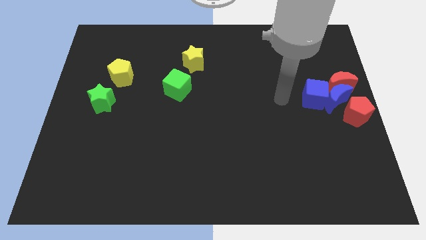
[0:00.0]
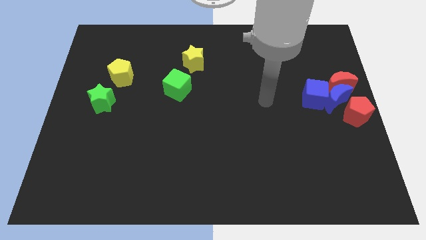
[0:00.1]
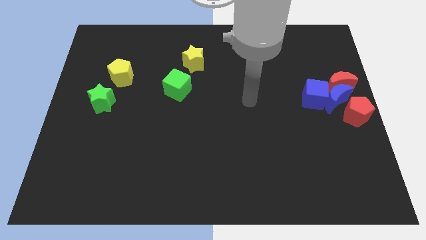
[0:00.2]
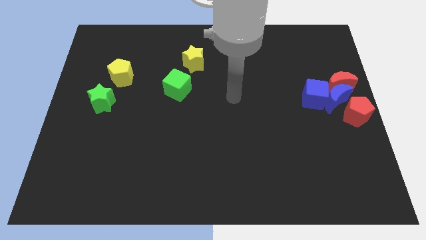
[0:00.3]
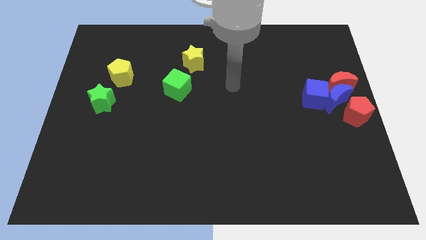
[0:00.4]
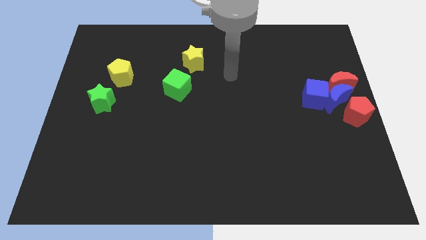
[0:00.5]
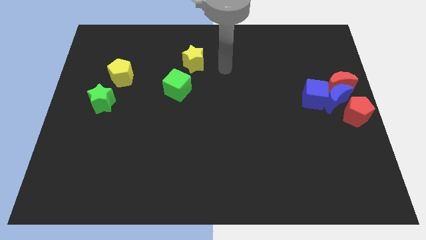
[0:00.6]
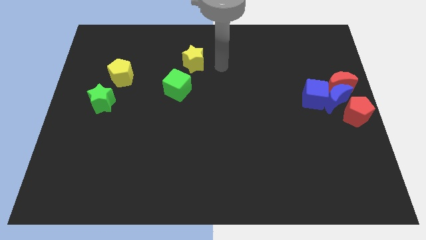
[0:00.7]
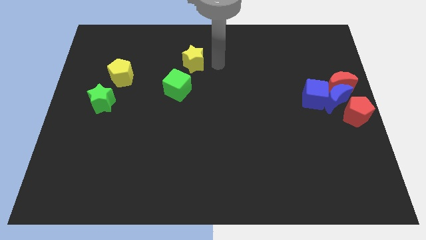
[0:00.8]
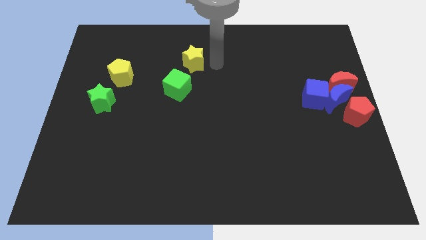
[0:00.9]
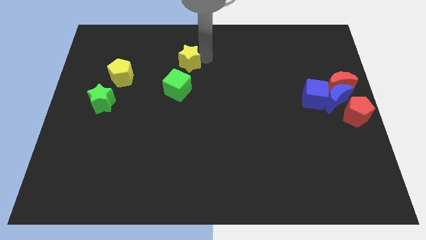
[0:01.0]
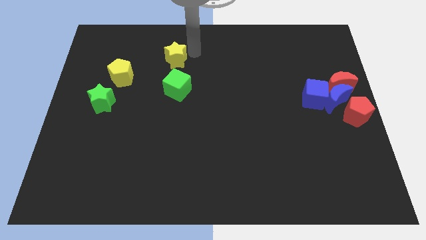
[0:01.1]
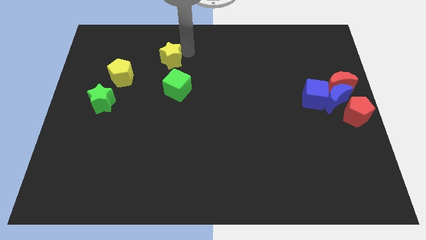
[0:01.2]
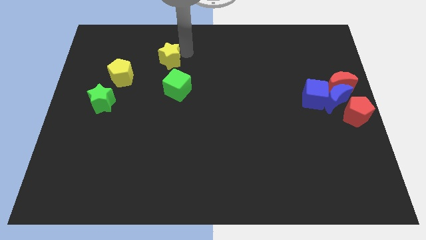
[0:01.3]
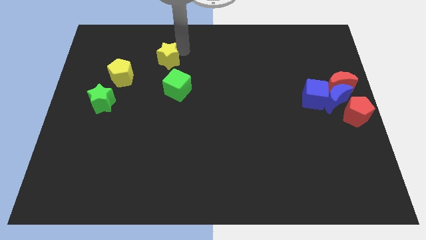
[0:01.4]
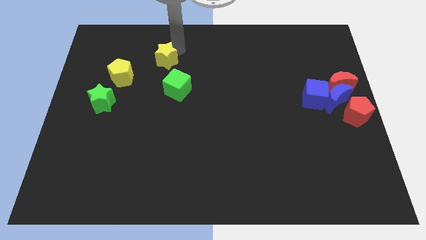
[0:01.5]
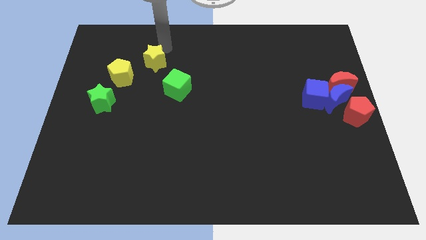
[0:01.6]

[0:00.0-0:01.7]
slightly push the yellow star to the left

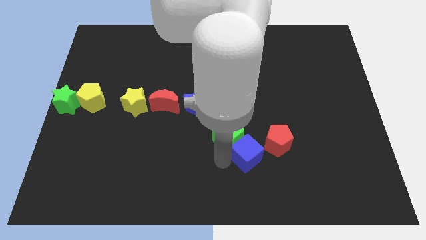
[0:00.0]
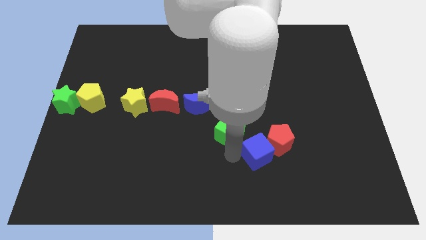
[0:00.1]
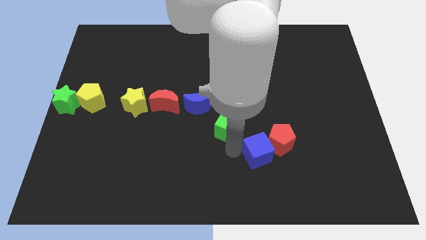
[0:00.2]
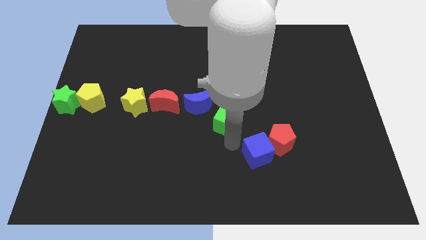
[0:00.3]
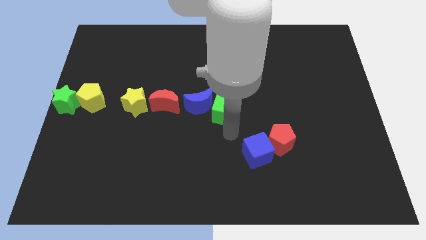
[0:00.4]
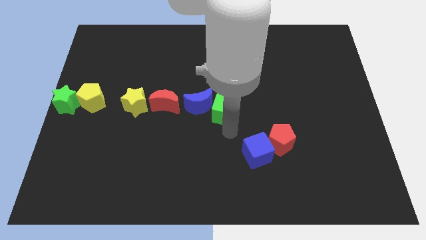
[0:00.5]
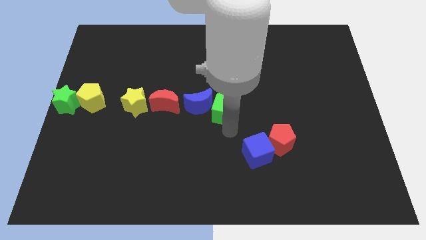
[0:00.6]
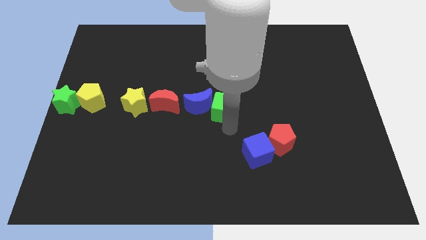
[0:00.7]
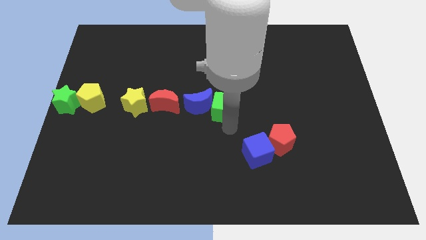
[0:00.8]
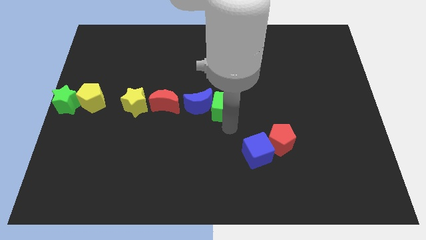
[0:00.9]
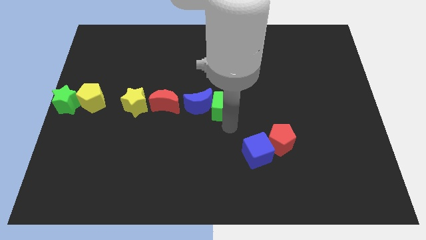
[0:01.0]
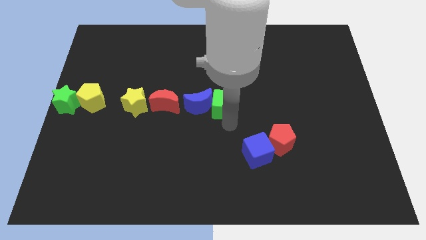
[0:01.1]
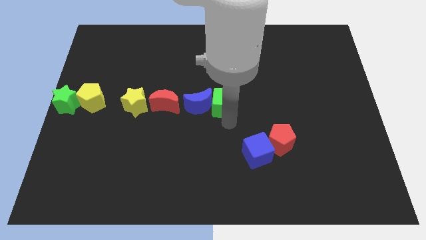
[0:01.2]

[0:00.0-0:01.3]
separate green cube from the blue cube

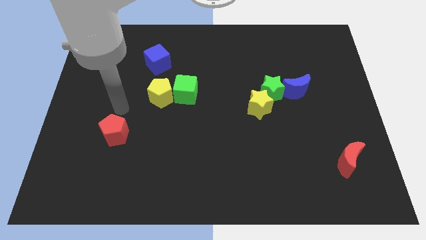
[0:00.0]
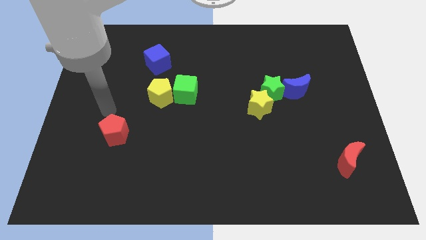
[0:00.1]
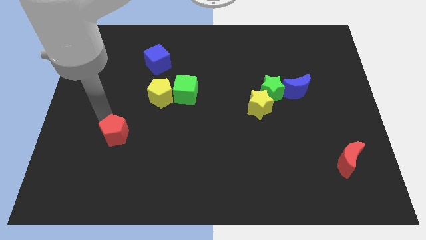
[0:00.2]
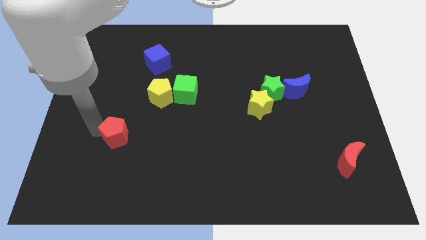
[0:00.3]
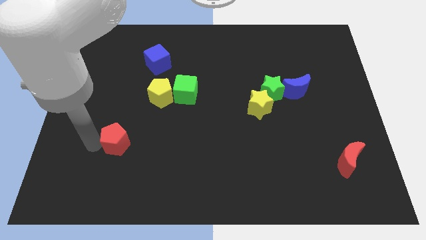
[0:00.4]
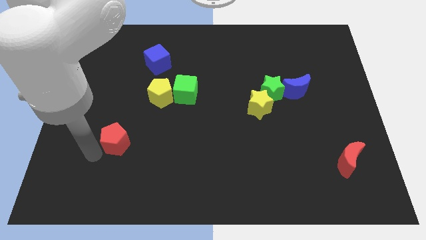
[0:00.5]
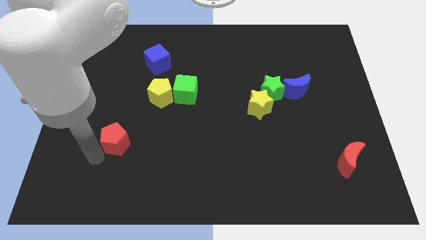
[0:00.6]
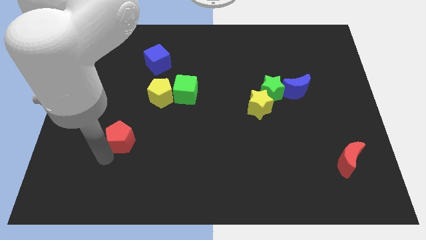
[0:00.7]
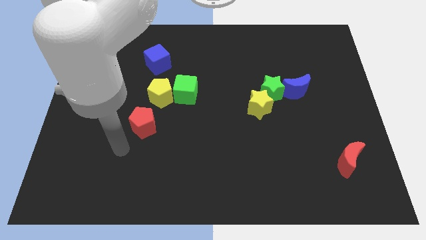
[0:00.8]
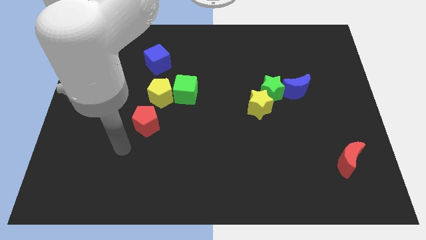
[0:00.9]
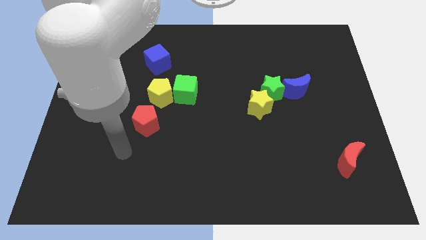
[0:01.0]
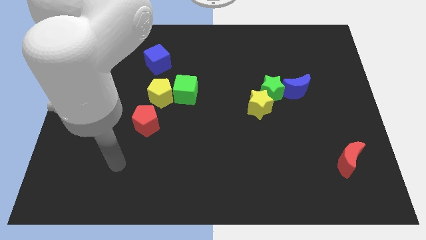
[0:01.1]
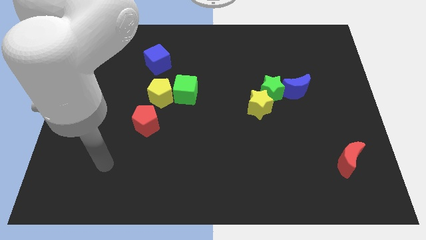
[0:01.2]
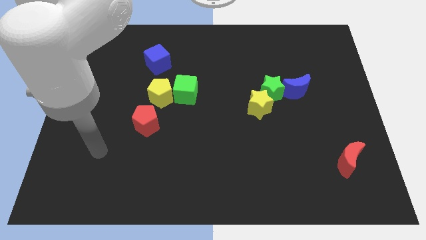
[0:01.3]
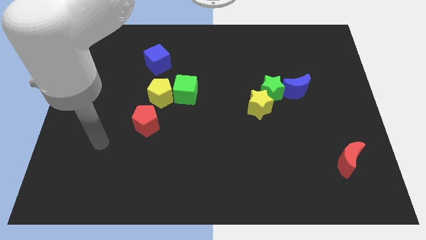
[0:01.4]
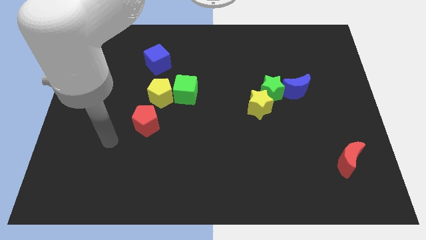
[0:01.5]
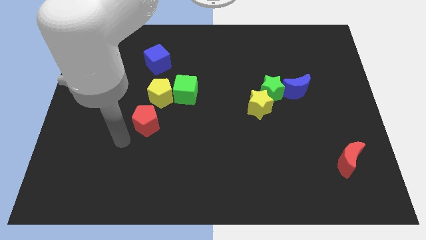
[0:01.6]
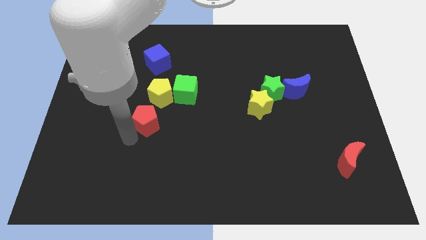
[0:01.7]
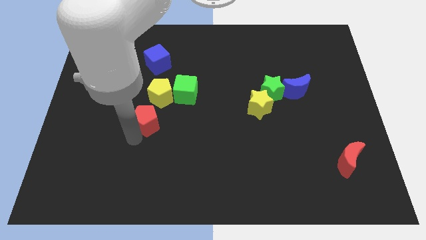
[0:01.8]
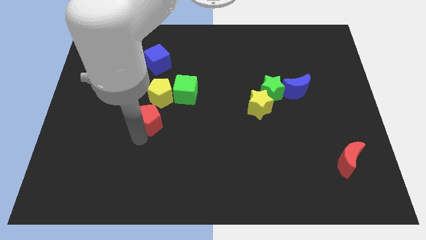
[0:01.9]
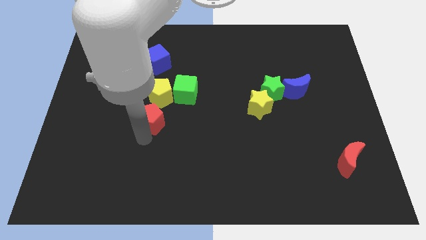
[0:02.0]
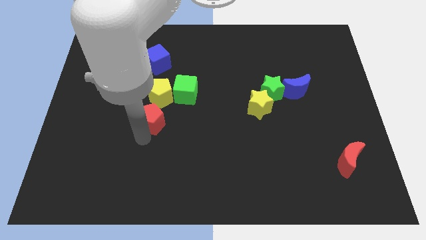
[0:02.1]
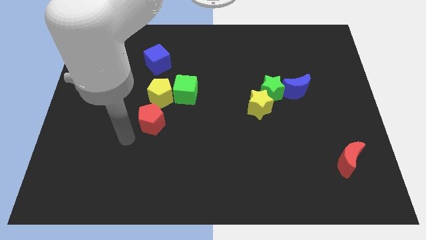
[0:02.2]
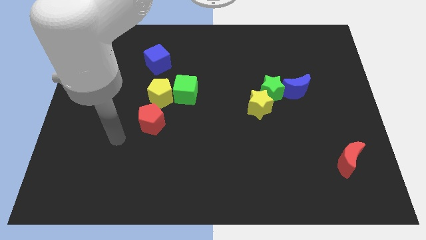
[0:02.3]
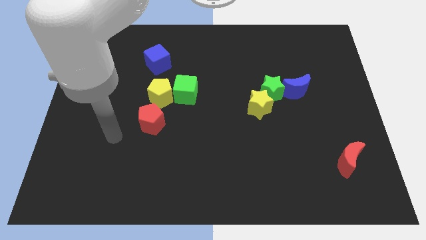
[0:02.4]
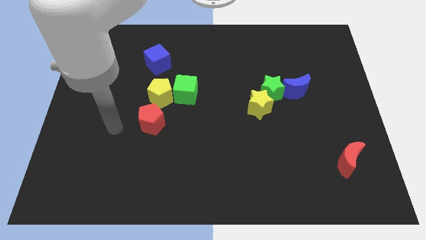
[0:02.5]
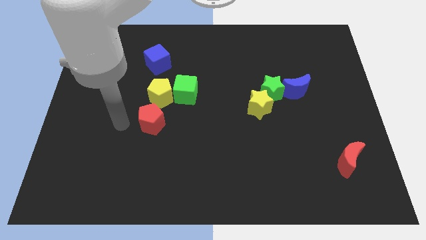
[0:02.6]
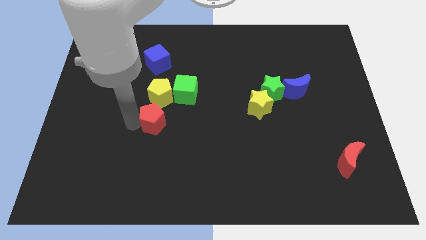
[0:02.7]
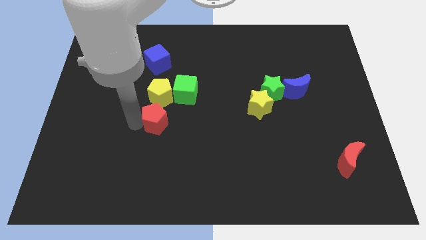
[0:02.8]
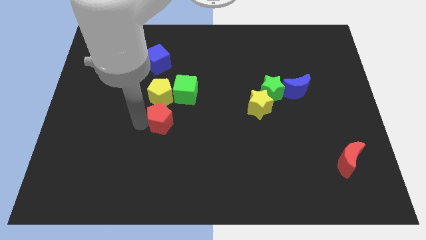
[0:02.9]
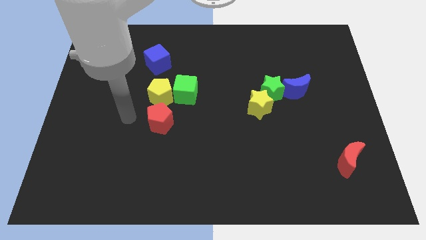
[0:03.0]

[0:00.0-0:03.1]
move the red pentagon below the yellow pentagon

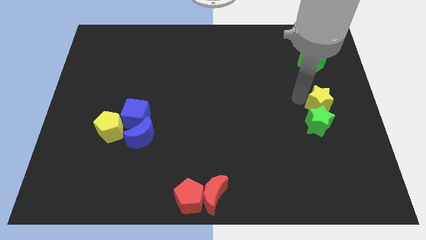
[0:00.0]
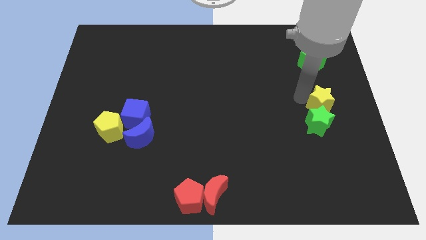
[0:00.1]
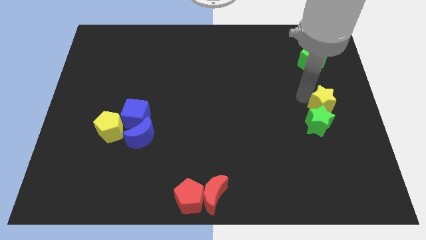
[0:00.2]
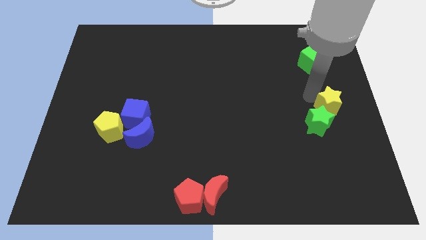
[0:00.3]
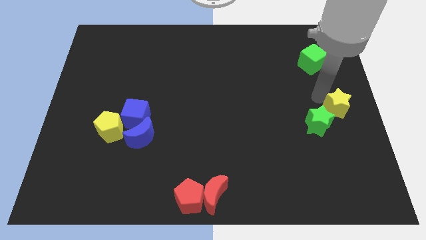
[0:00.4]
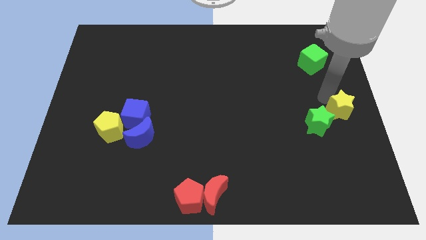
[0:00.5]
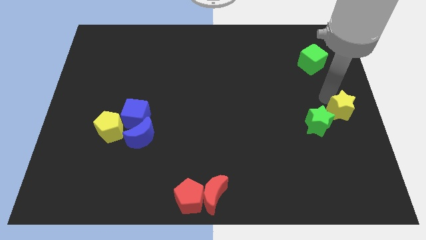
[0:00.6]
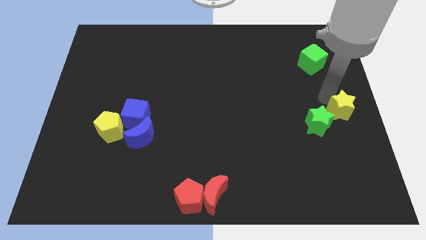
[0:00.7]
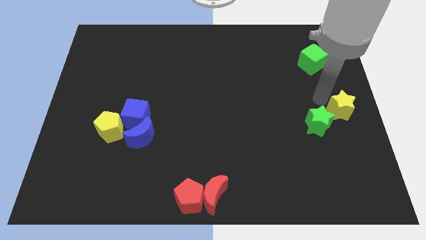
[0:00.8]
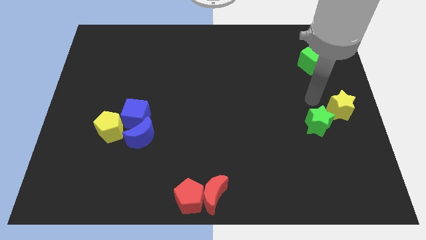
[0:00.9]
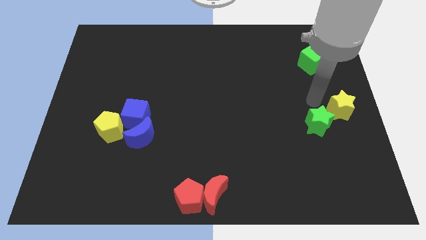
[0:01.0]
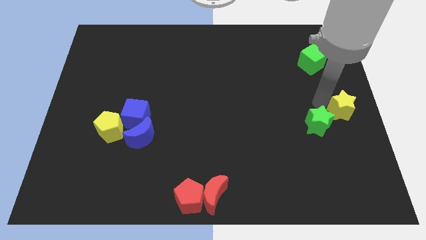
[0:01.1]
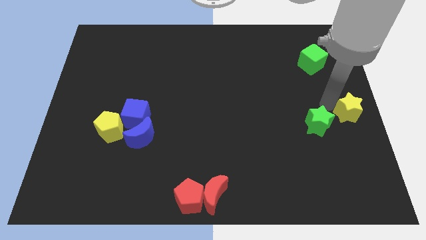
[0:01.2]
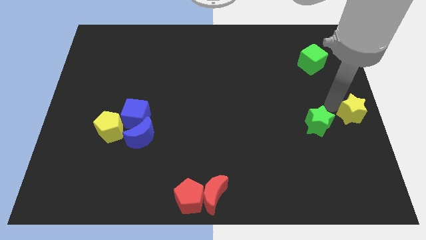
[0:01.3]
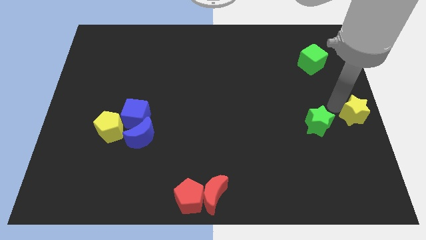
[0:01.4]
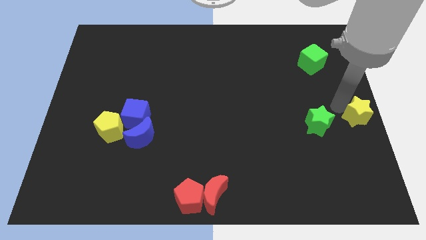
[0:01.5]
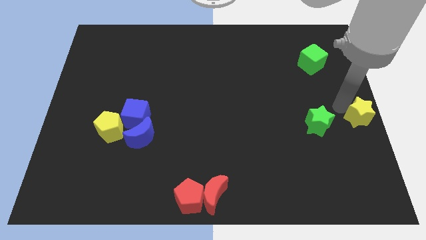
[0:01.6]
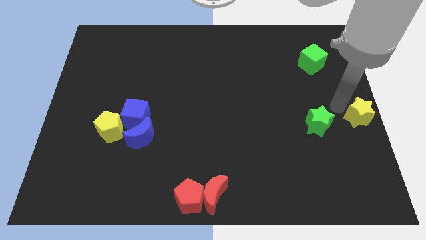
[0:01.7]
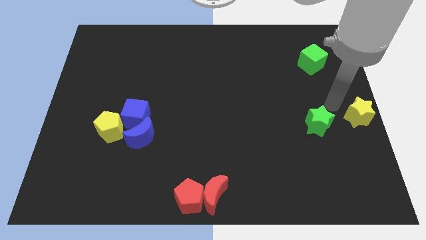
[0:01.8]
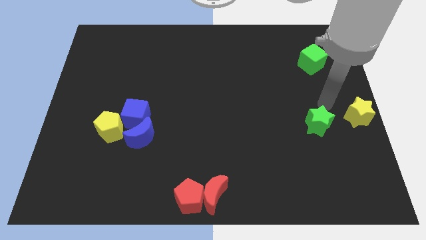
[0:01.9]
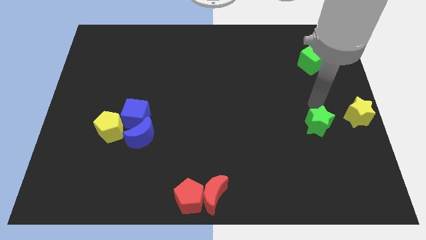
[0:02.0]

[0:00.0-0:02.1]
move the yellow star to the right center of the board

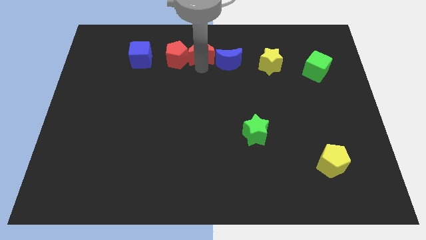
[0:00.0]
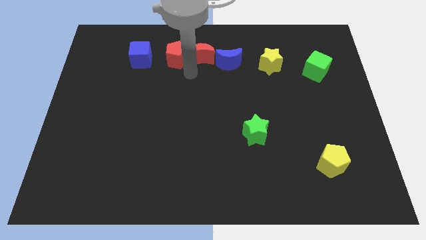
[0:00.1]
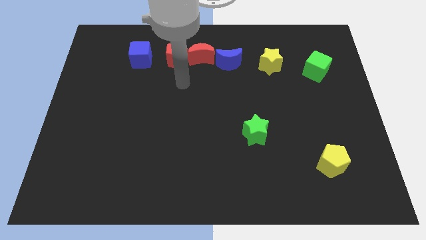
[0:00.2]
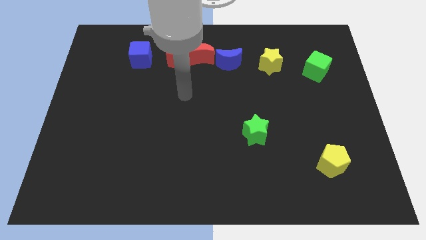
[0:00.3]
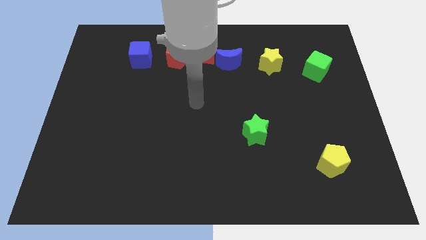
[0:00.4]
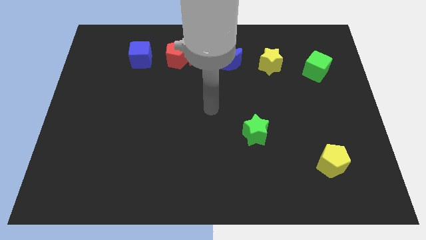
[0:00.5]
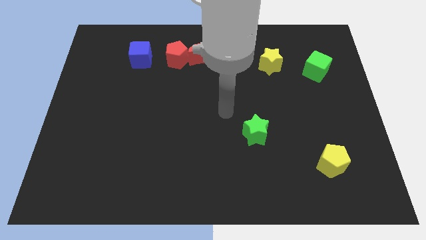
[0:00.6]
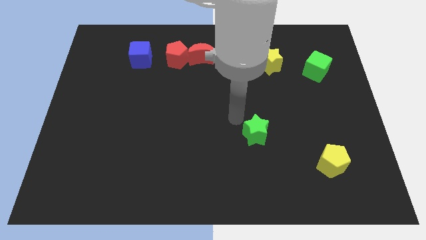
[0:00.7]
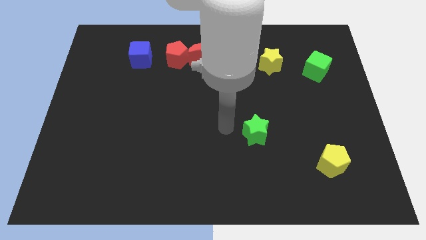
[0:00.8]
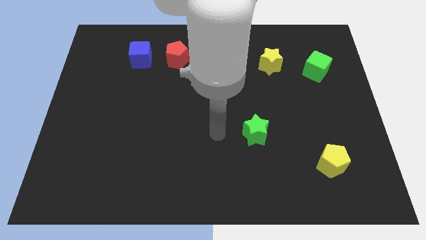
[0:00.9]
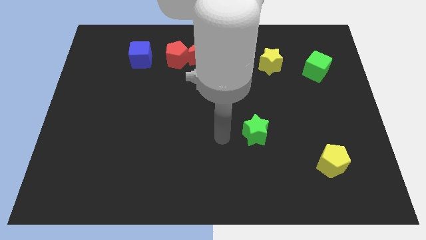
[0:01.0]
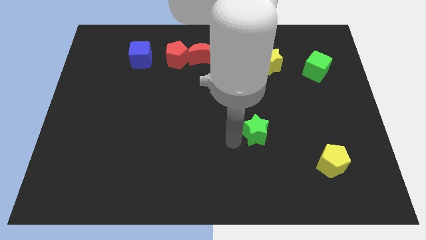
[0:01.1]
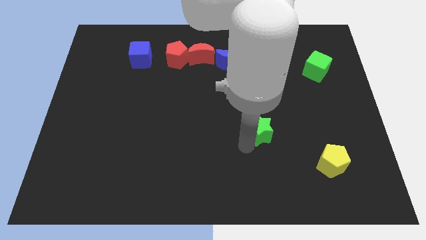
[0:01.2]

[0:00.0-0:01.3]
move your arm towards the green star
